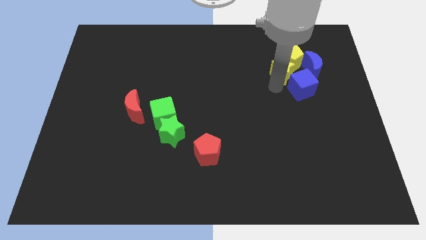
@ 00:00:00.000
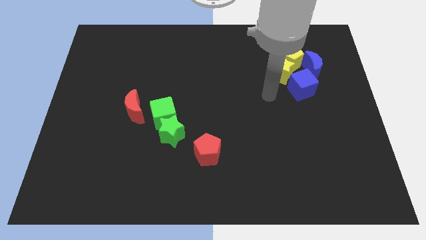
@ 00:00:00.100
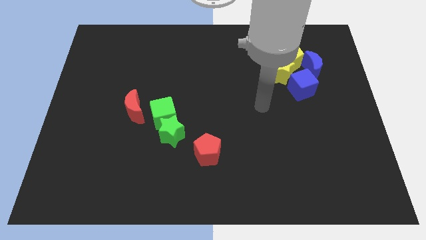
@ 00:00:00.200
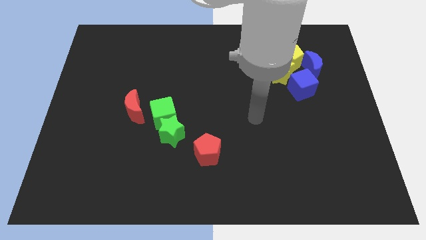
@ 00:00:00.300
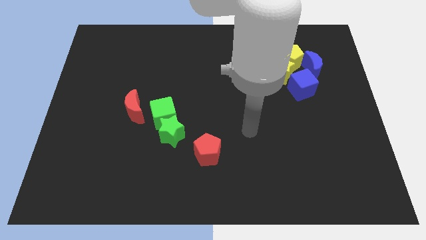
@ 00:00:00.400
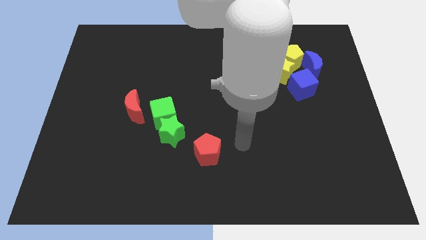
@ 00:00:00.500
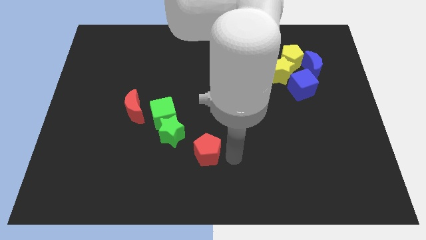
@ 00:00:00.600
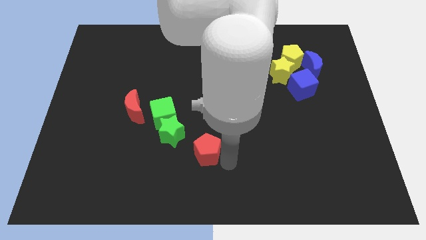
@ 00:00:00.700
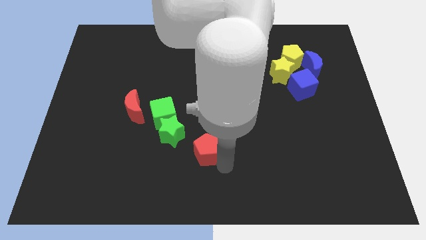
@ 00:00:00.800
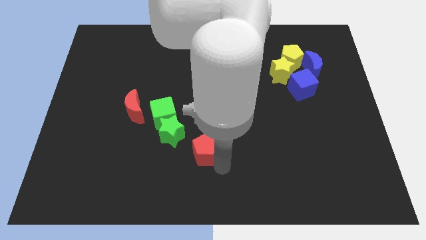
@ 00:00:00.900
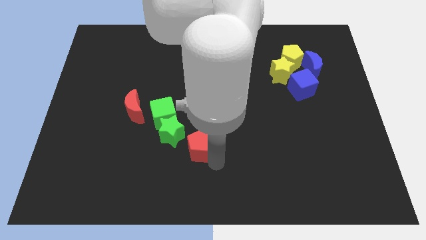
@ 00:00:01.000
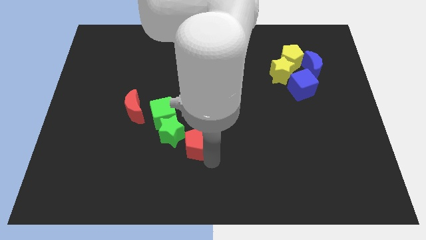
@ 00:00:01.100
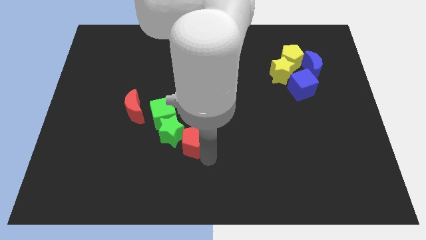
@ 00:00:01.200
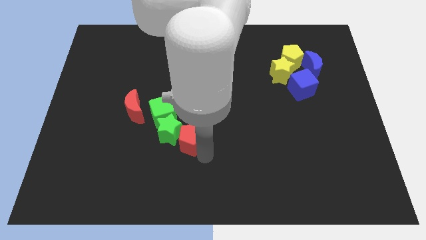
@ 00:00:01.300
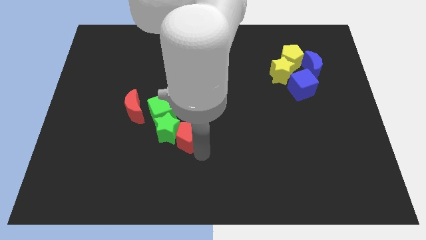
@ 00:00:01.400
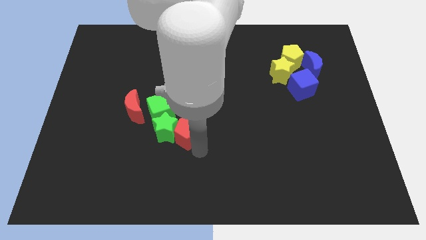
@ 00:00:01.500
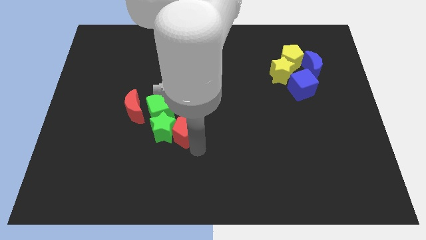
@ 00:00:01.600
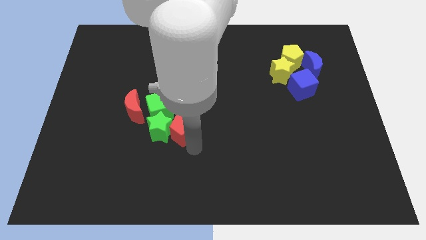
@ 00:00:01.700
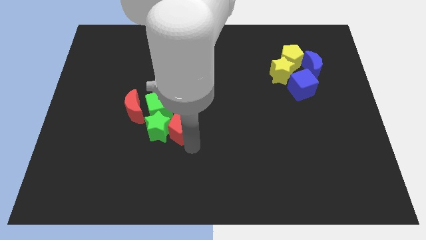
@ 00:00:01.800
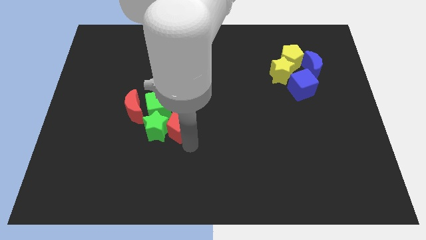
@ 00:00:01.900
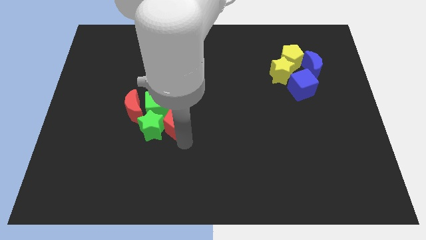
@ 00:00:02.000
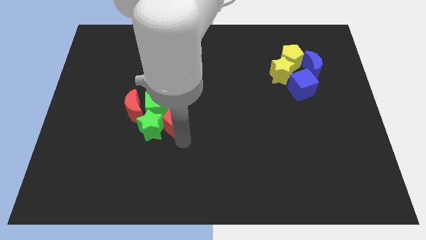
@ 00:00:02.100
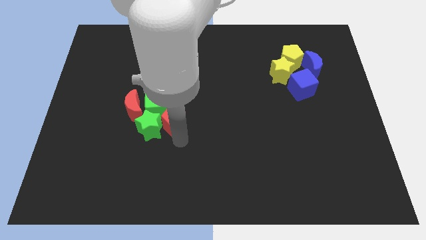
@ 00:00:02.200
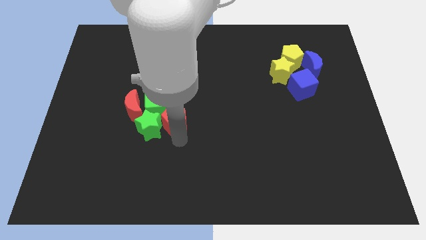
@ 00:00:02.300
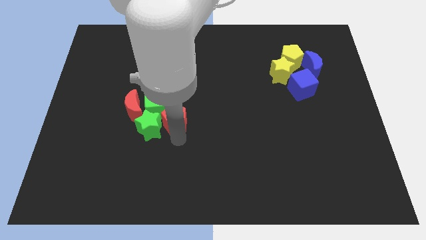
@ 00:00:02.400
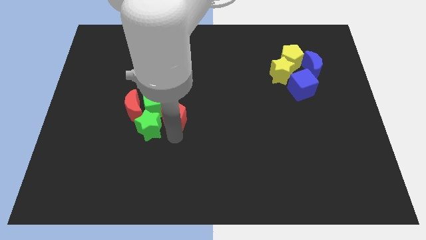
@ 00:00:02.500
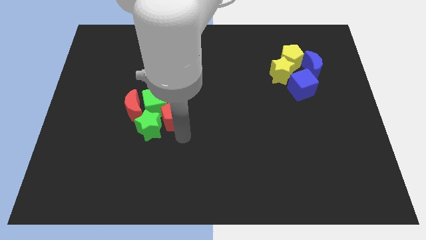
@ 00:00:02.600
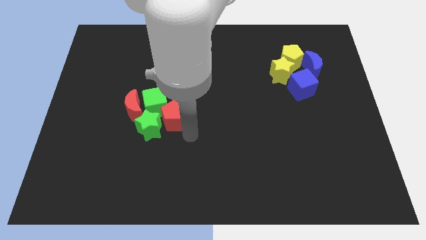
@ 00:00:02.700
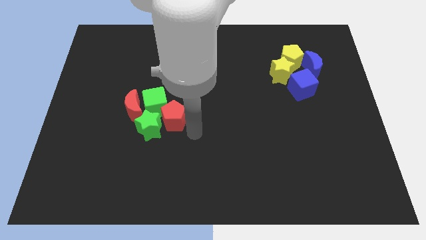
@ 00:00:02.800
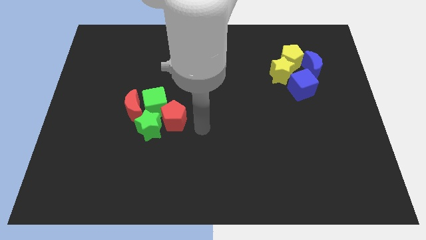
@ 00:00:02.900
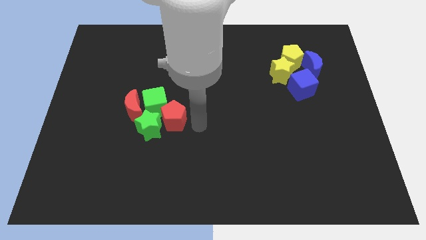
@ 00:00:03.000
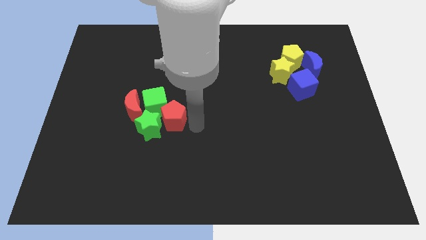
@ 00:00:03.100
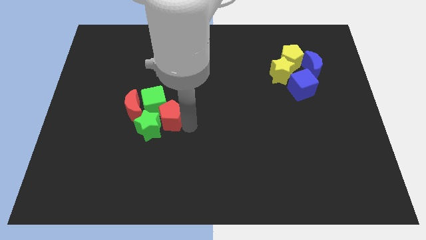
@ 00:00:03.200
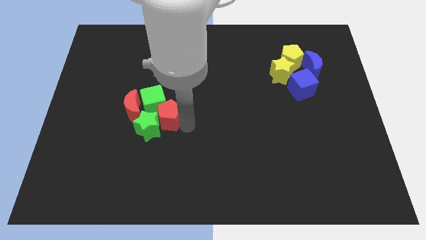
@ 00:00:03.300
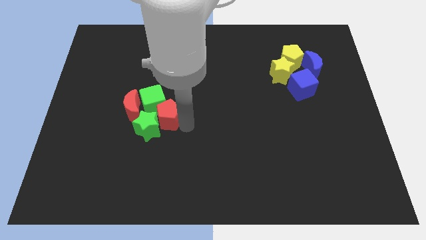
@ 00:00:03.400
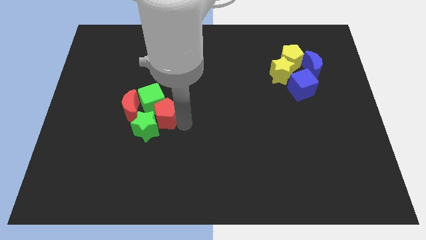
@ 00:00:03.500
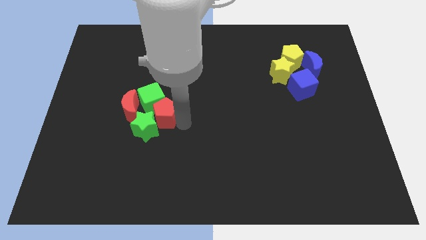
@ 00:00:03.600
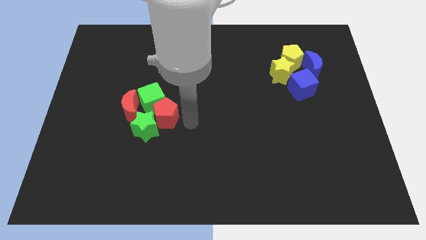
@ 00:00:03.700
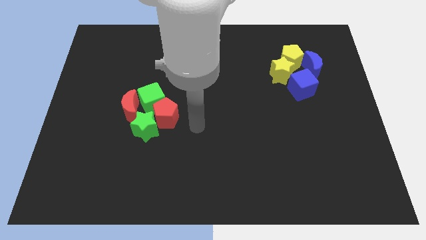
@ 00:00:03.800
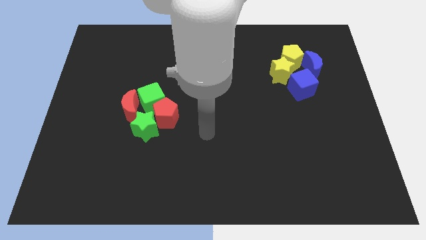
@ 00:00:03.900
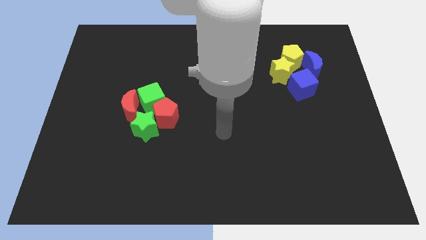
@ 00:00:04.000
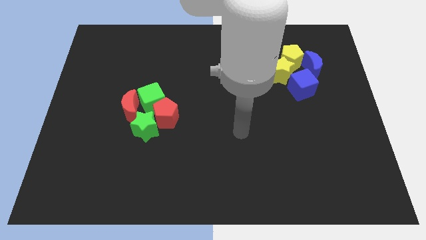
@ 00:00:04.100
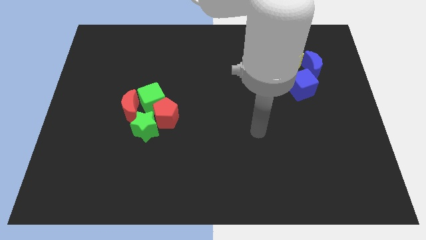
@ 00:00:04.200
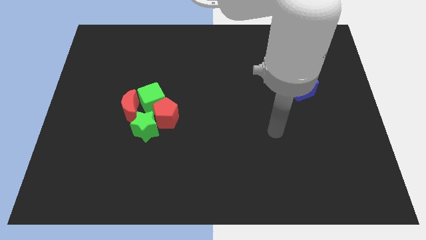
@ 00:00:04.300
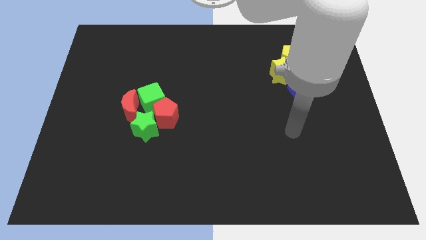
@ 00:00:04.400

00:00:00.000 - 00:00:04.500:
place red pentagon into the group of blocks

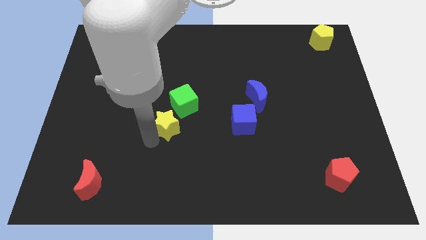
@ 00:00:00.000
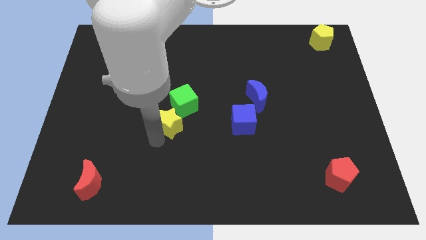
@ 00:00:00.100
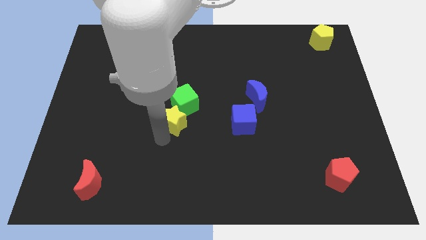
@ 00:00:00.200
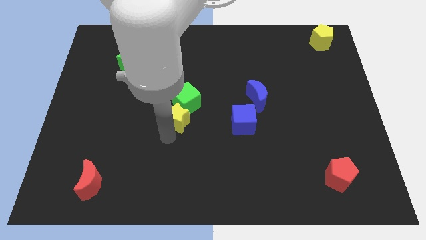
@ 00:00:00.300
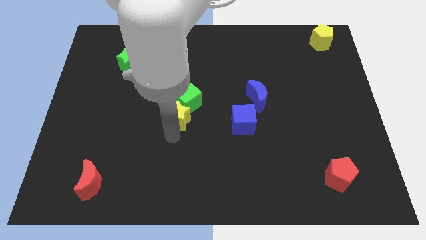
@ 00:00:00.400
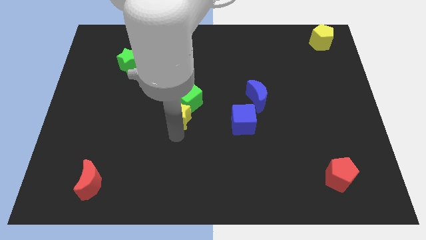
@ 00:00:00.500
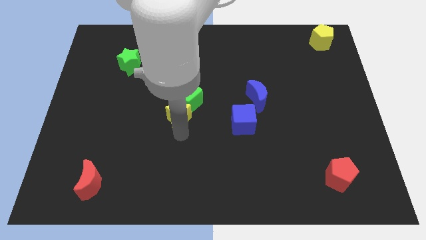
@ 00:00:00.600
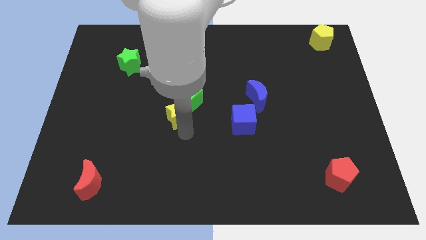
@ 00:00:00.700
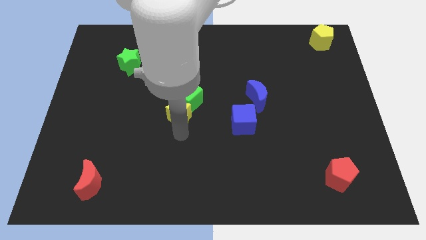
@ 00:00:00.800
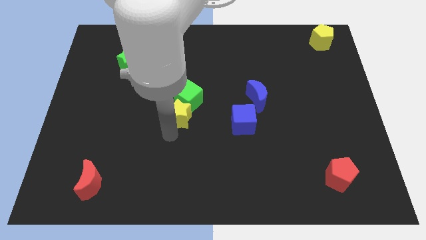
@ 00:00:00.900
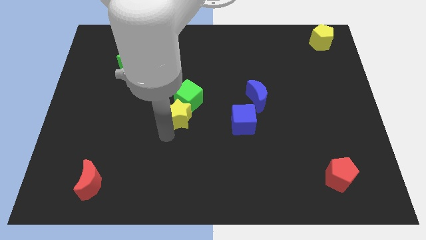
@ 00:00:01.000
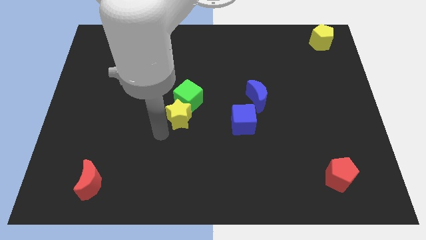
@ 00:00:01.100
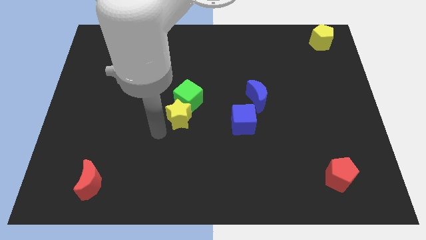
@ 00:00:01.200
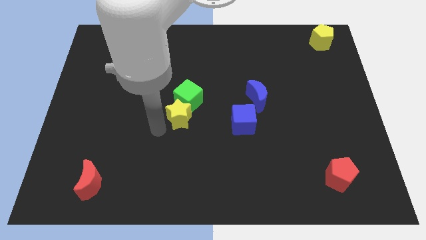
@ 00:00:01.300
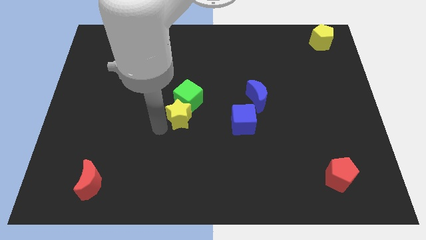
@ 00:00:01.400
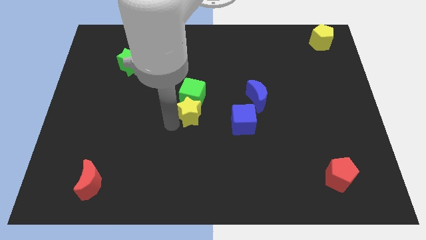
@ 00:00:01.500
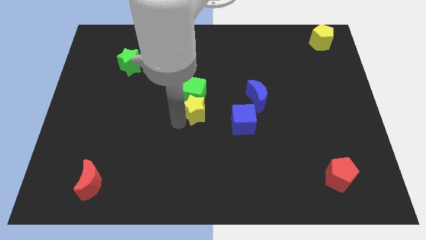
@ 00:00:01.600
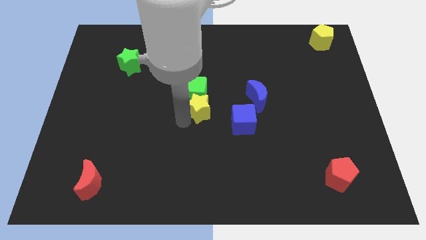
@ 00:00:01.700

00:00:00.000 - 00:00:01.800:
place yellow star to the bottom of green cube

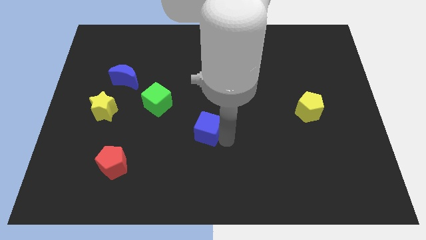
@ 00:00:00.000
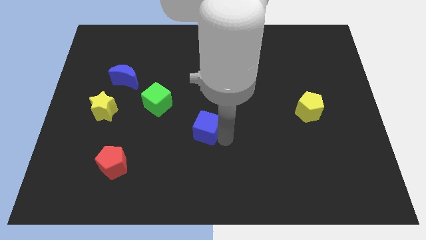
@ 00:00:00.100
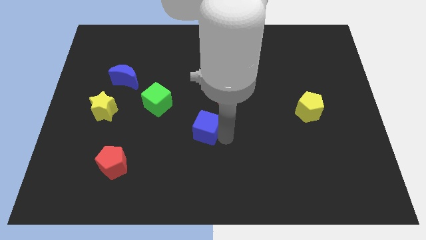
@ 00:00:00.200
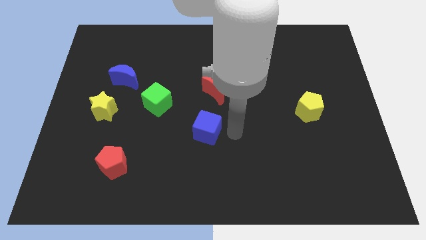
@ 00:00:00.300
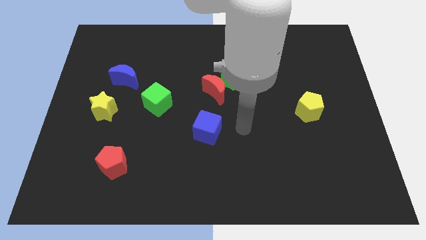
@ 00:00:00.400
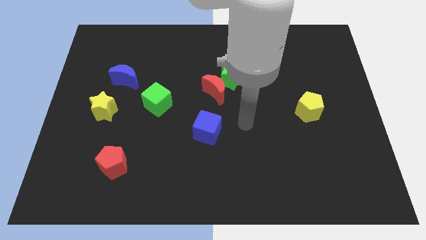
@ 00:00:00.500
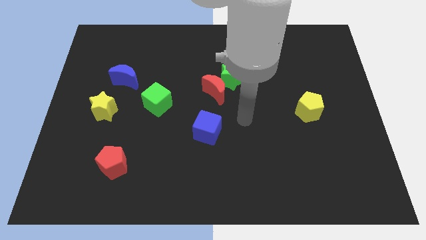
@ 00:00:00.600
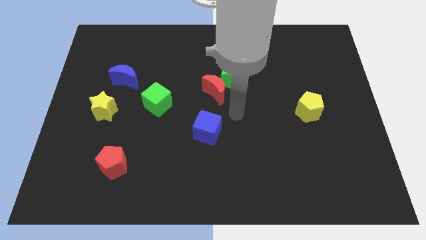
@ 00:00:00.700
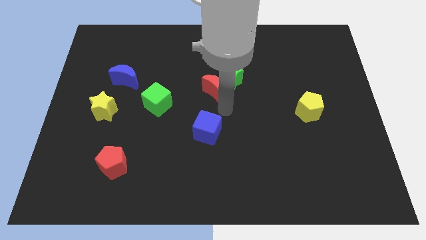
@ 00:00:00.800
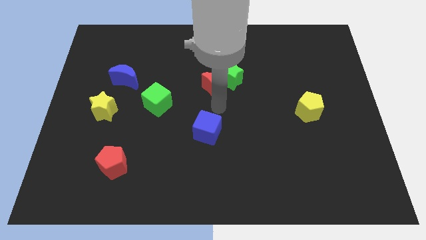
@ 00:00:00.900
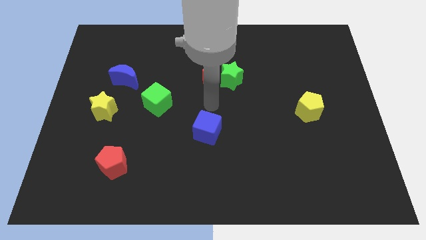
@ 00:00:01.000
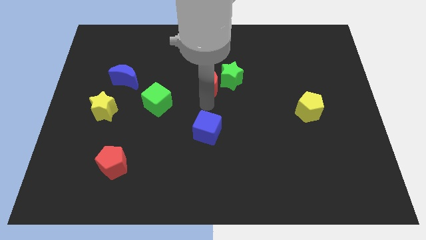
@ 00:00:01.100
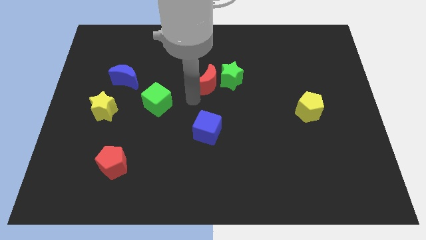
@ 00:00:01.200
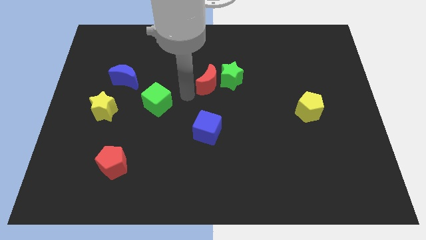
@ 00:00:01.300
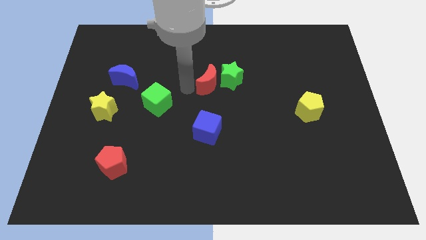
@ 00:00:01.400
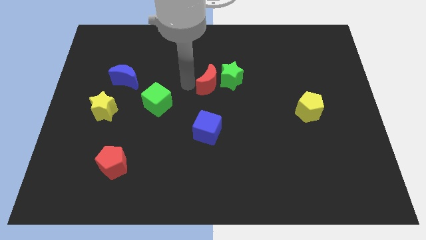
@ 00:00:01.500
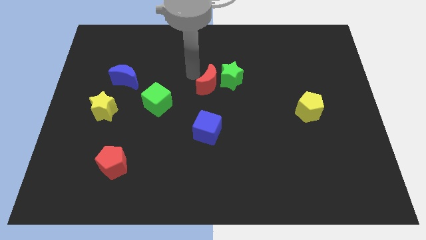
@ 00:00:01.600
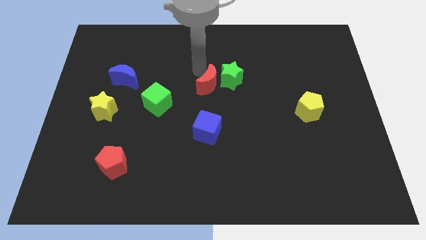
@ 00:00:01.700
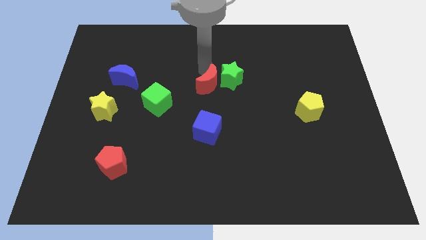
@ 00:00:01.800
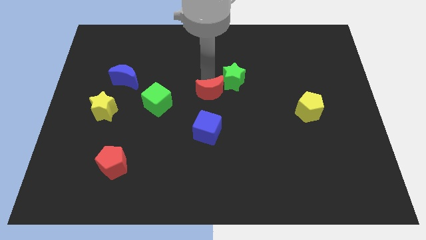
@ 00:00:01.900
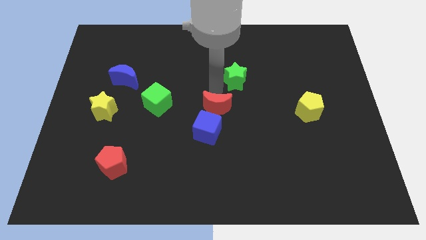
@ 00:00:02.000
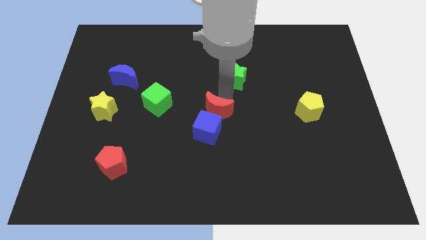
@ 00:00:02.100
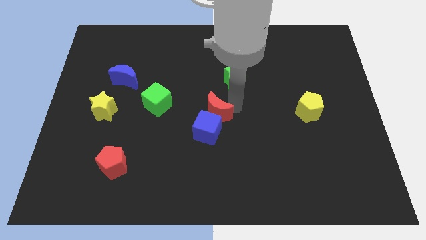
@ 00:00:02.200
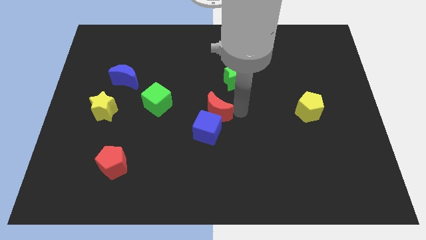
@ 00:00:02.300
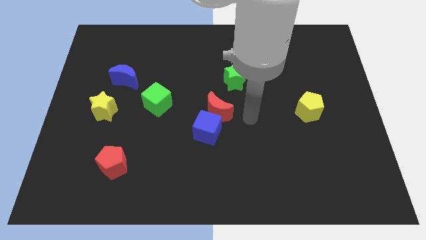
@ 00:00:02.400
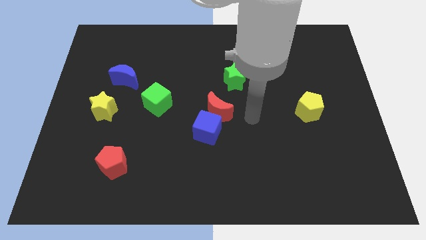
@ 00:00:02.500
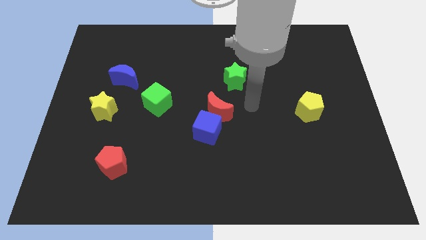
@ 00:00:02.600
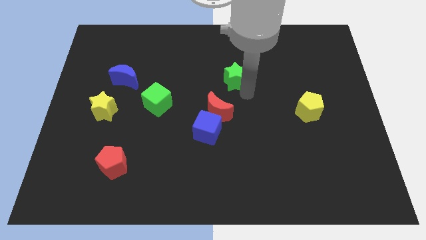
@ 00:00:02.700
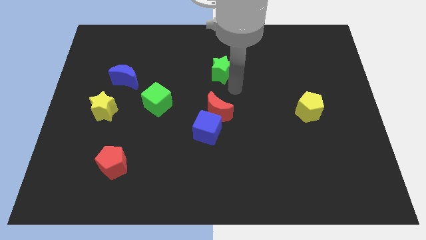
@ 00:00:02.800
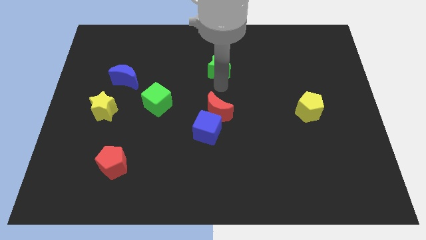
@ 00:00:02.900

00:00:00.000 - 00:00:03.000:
place the red moon diagonally in between the blue cube and the green star
